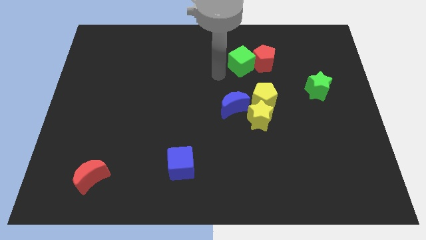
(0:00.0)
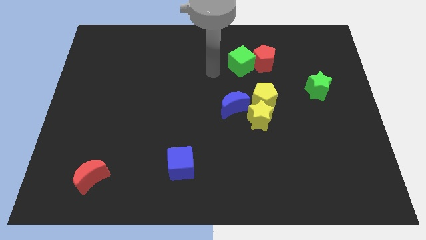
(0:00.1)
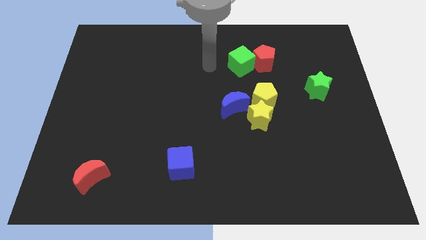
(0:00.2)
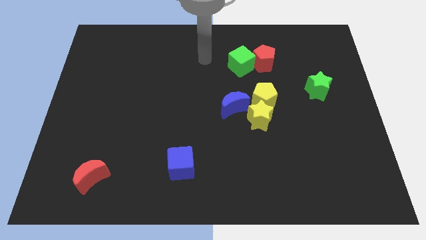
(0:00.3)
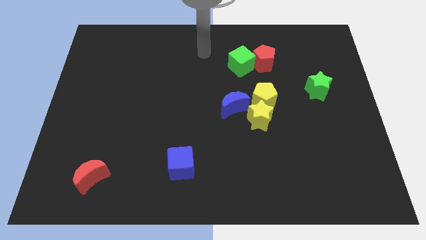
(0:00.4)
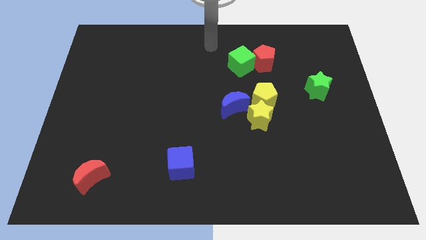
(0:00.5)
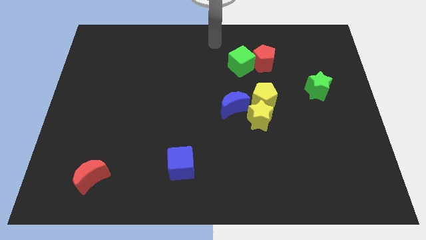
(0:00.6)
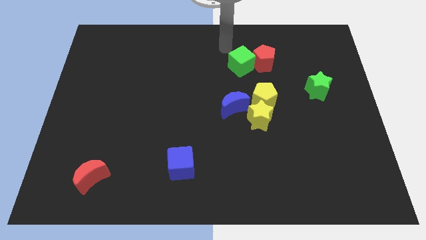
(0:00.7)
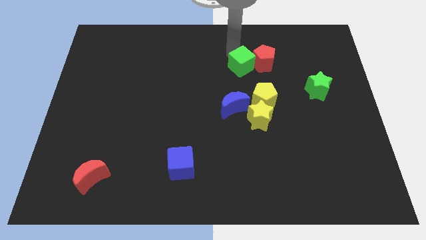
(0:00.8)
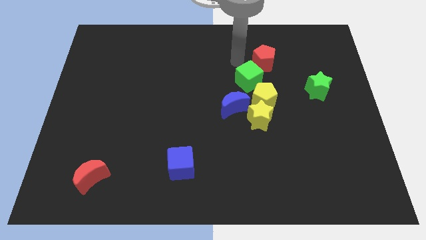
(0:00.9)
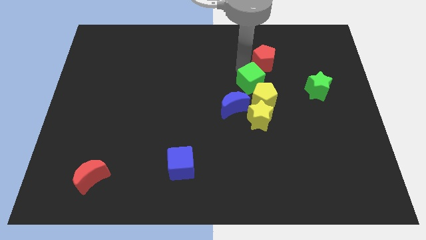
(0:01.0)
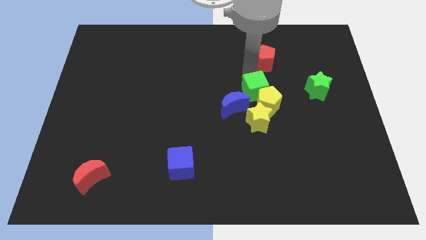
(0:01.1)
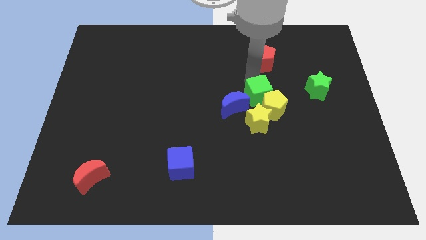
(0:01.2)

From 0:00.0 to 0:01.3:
push the green cube into yellow pentagon

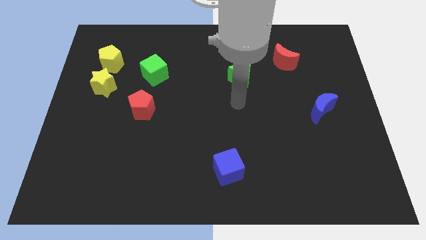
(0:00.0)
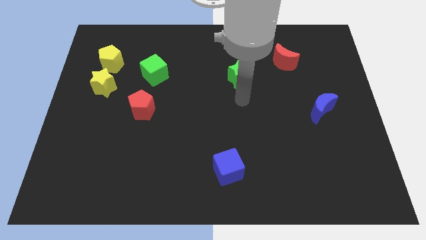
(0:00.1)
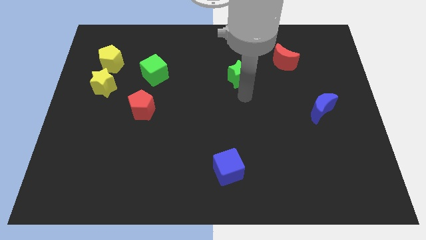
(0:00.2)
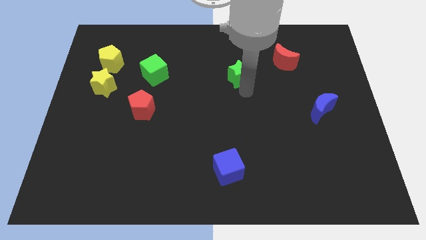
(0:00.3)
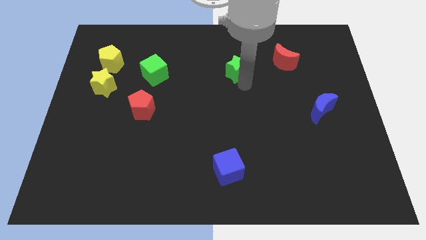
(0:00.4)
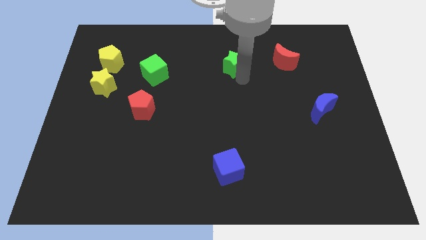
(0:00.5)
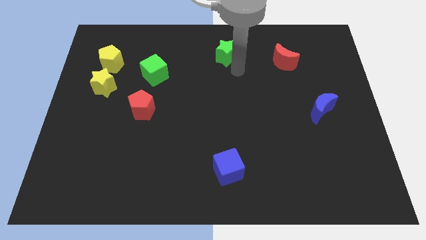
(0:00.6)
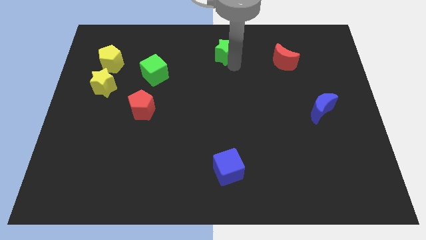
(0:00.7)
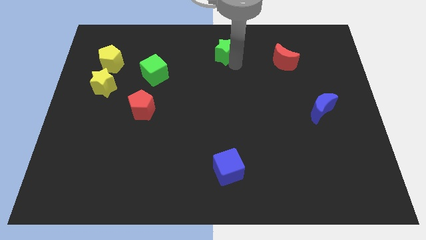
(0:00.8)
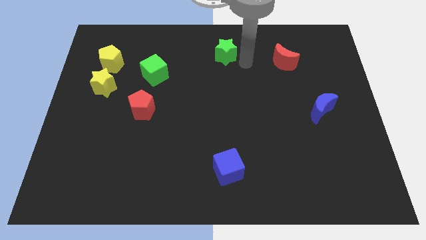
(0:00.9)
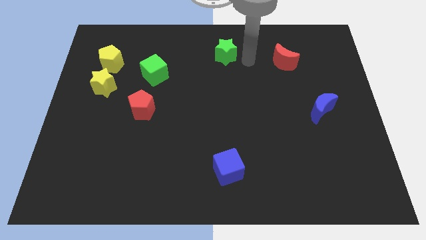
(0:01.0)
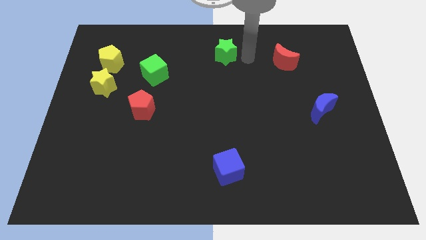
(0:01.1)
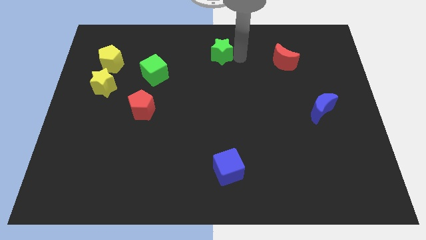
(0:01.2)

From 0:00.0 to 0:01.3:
place green star on top center of the board

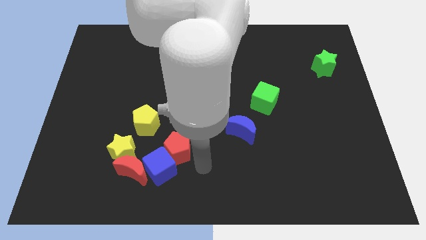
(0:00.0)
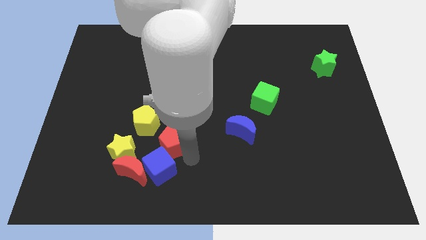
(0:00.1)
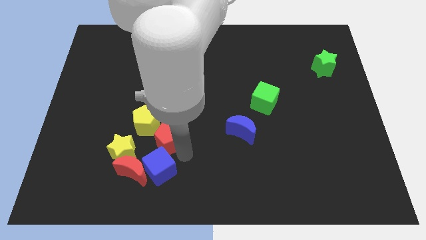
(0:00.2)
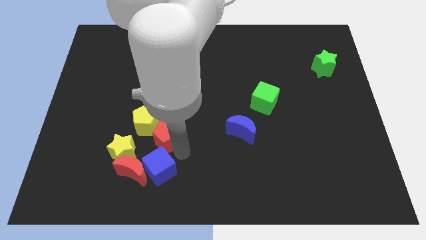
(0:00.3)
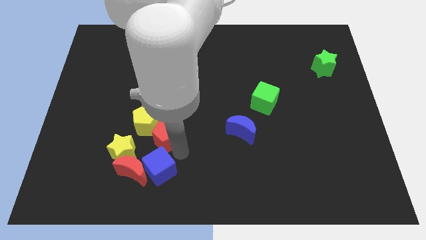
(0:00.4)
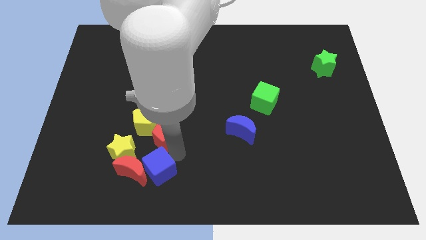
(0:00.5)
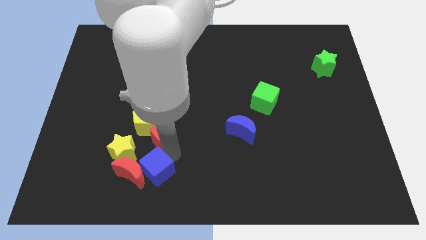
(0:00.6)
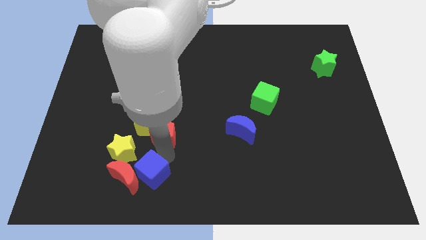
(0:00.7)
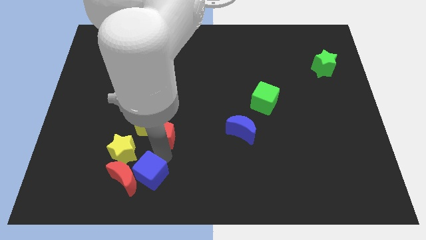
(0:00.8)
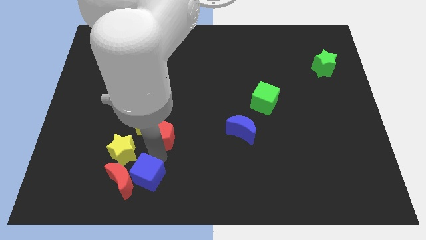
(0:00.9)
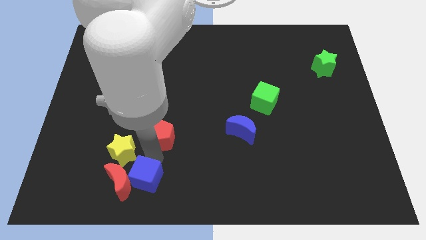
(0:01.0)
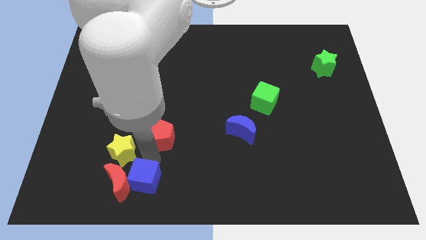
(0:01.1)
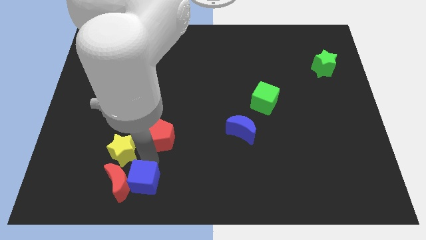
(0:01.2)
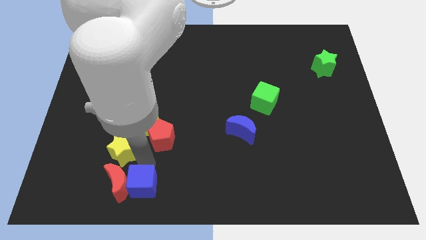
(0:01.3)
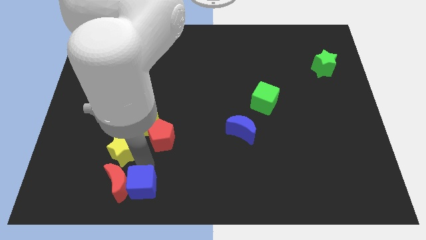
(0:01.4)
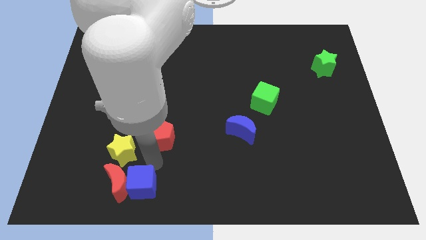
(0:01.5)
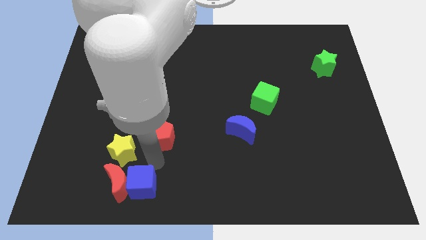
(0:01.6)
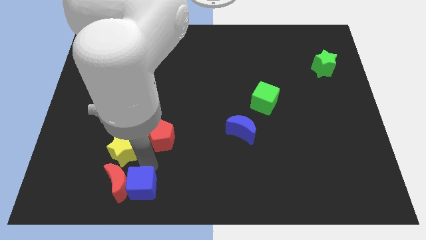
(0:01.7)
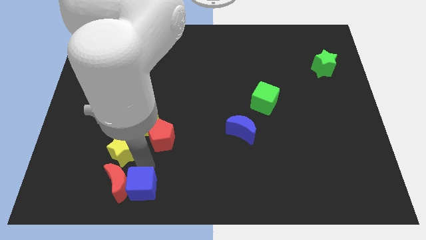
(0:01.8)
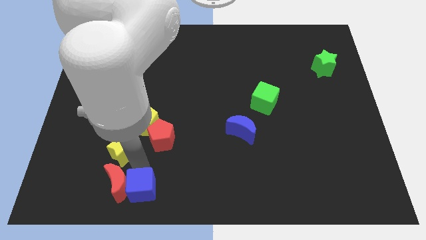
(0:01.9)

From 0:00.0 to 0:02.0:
slightly move the red pentagon

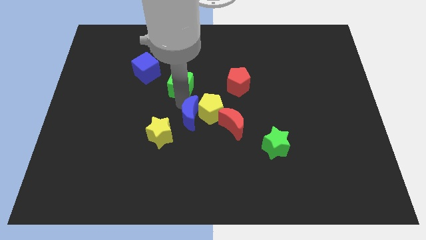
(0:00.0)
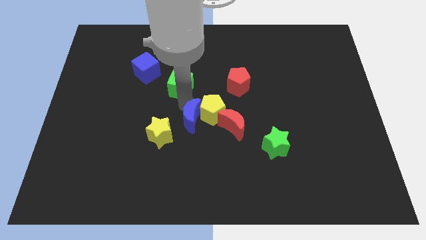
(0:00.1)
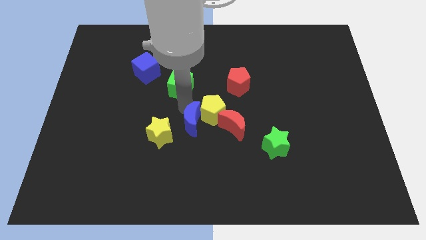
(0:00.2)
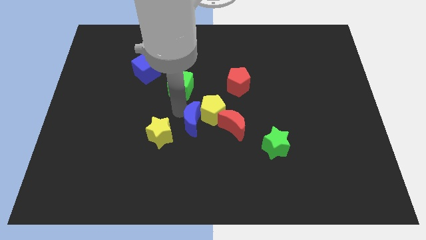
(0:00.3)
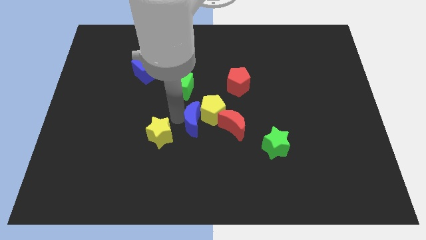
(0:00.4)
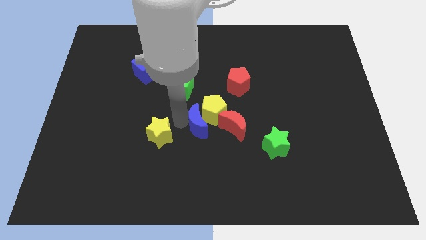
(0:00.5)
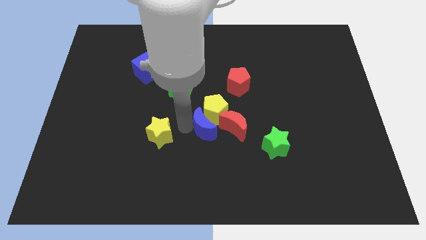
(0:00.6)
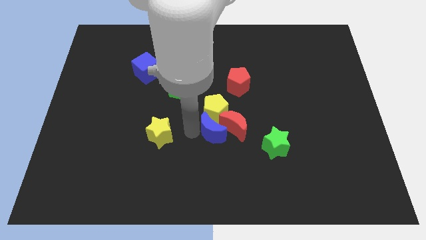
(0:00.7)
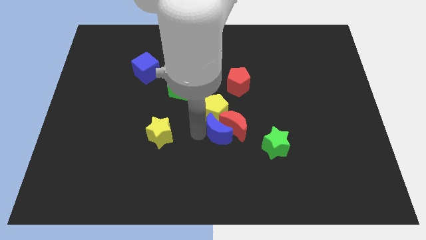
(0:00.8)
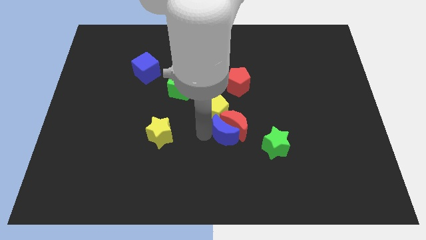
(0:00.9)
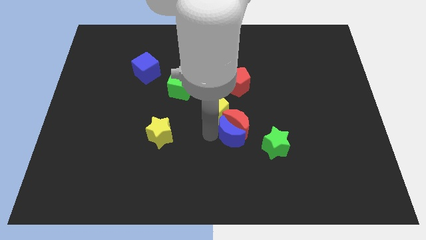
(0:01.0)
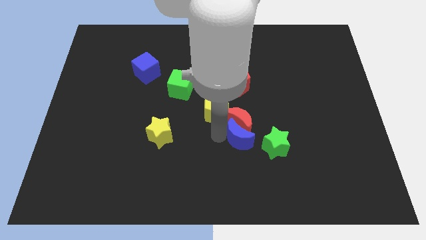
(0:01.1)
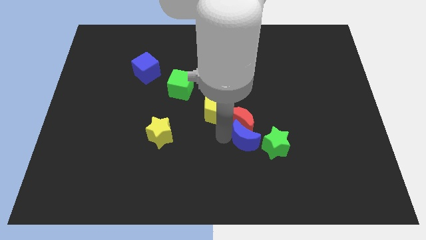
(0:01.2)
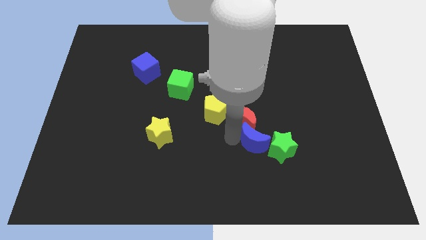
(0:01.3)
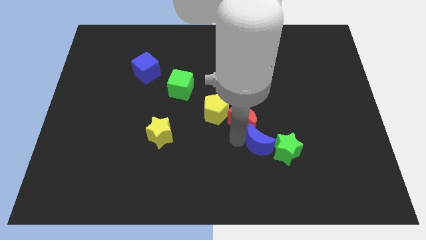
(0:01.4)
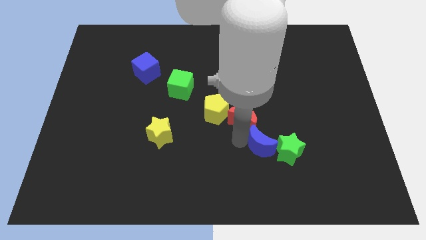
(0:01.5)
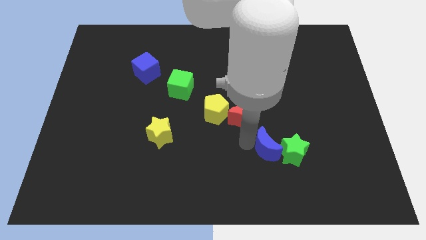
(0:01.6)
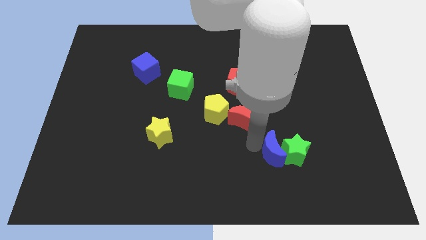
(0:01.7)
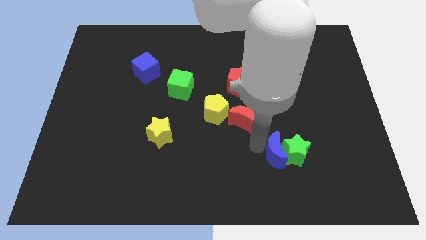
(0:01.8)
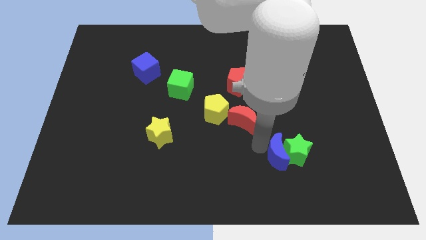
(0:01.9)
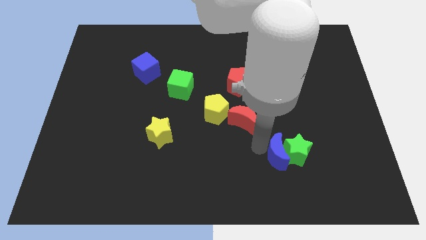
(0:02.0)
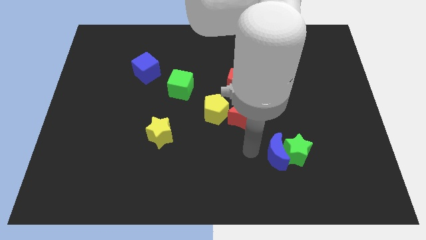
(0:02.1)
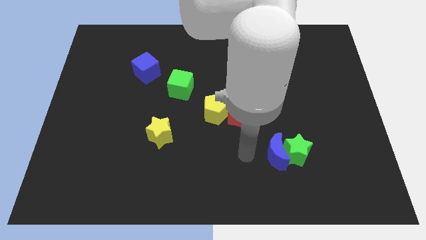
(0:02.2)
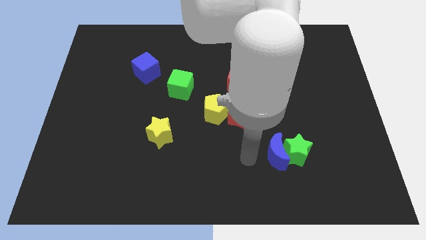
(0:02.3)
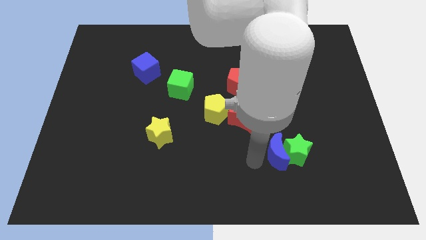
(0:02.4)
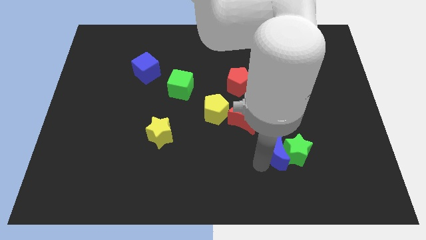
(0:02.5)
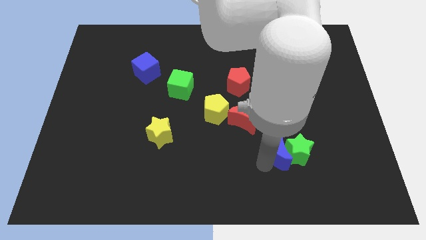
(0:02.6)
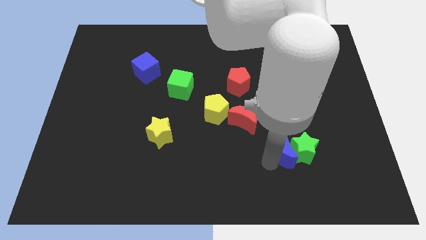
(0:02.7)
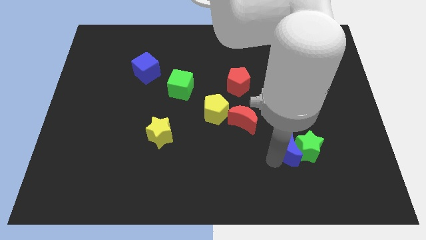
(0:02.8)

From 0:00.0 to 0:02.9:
move the blue crescent into the green star towards right

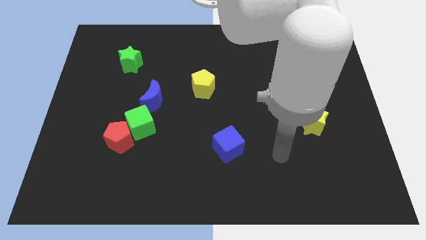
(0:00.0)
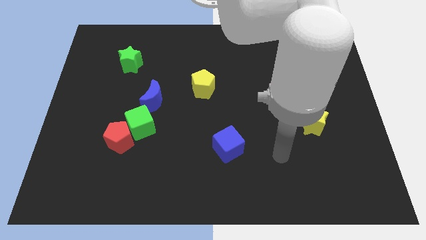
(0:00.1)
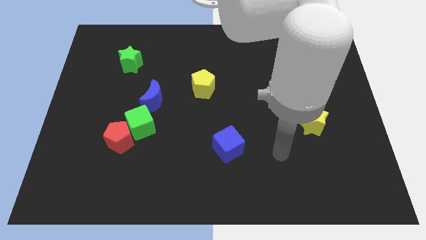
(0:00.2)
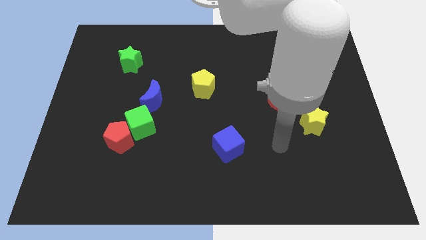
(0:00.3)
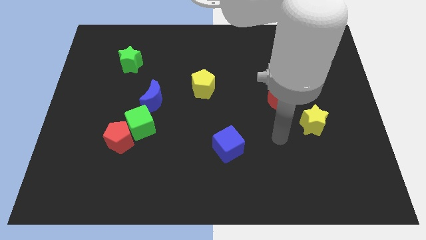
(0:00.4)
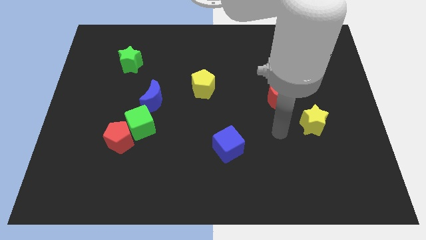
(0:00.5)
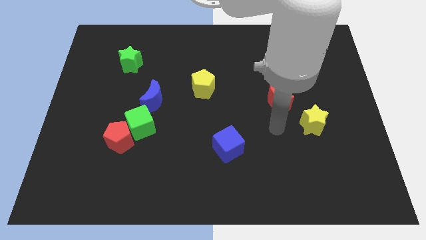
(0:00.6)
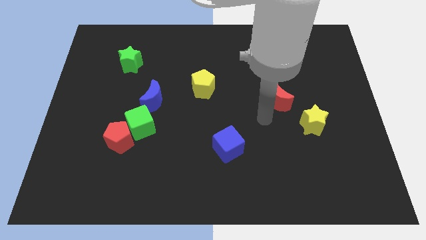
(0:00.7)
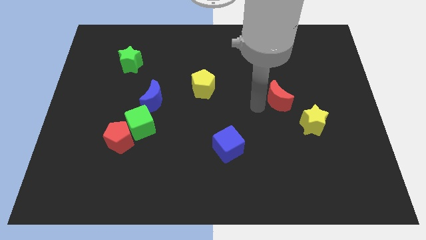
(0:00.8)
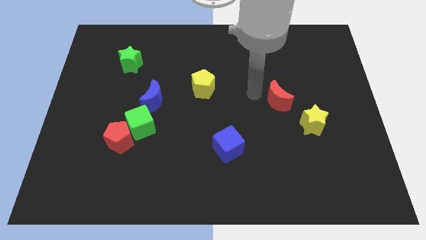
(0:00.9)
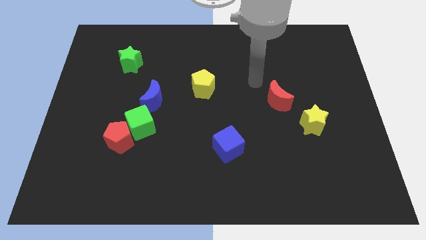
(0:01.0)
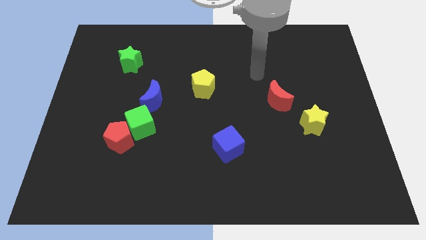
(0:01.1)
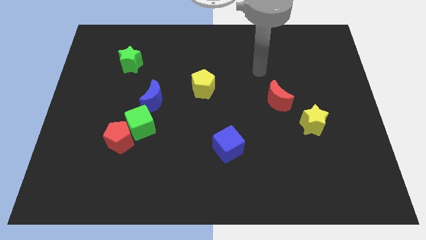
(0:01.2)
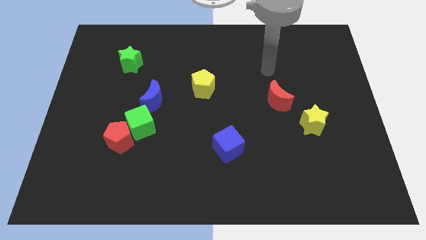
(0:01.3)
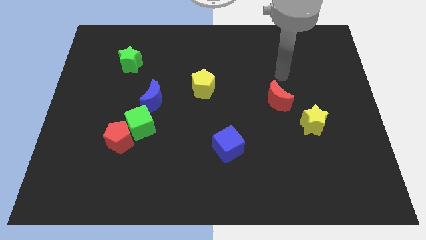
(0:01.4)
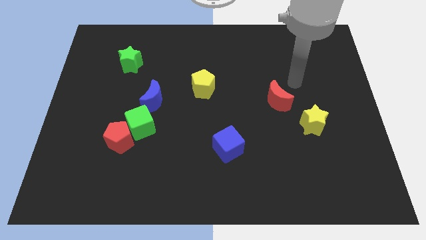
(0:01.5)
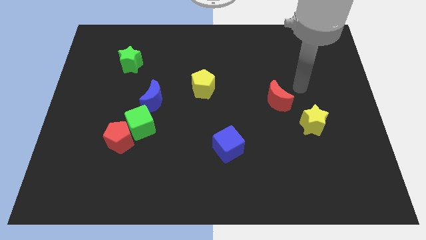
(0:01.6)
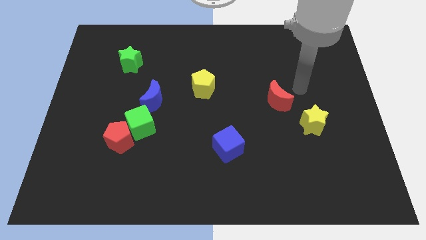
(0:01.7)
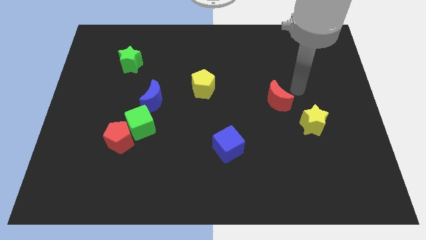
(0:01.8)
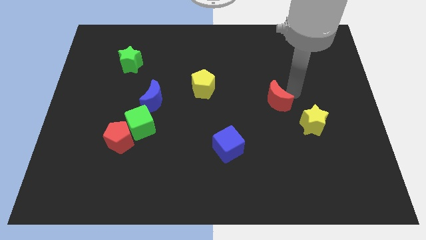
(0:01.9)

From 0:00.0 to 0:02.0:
move the arm towards the red crescent
